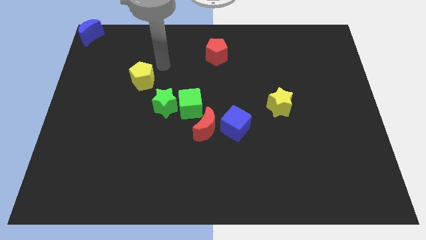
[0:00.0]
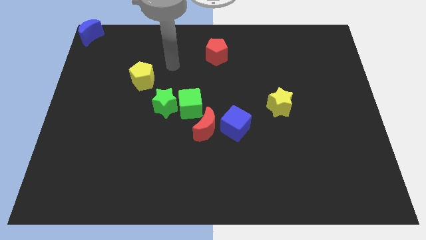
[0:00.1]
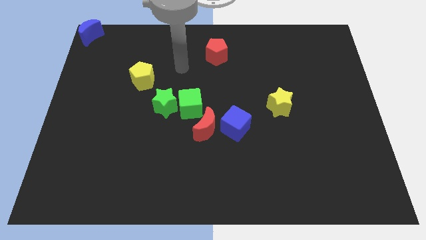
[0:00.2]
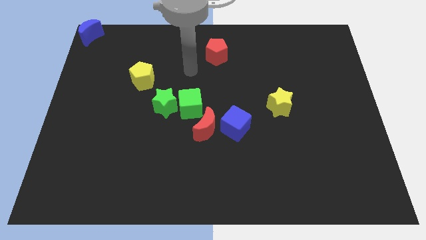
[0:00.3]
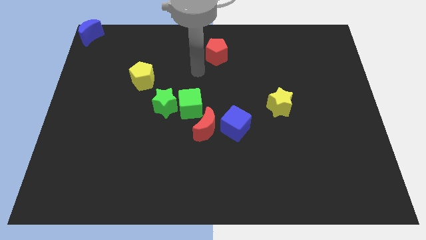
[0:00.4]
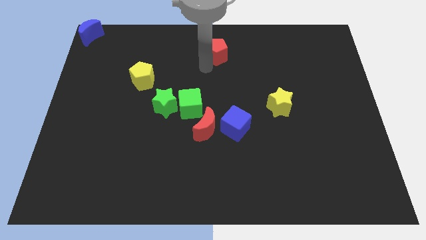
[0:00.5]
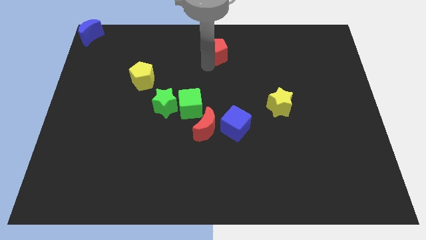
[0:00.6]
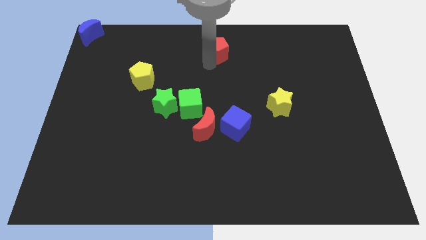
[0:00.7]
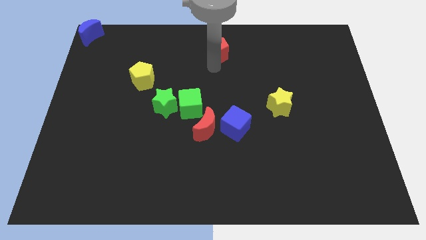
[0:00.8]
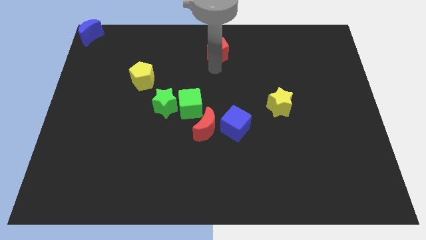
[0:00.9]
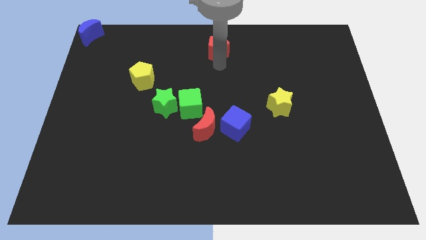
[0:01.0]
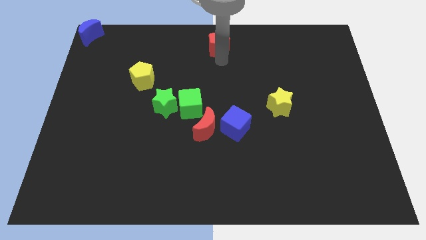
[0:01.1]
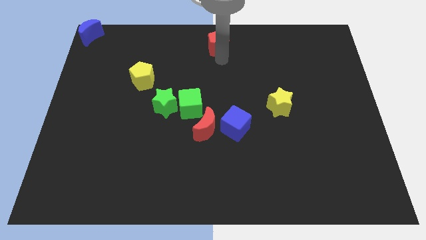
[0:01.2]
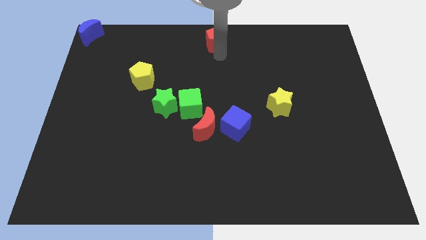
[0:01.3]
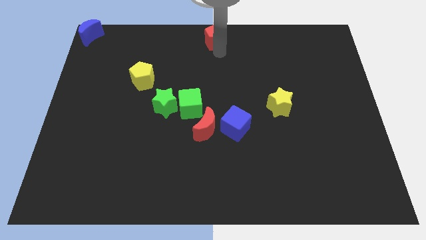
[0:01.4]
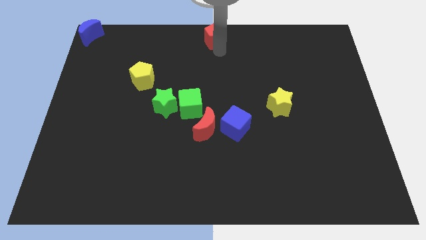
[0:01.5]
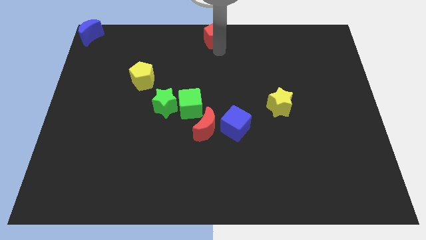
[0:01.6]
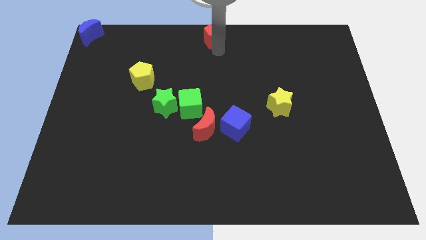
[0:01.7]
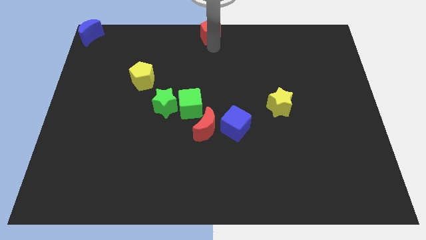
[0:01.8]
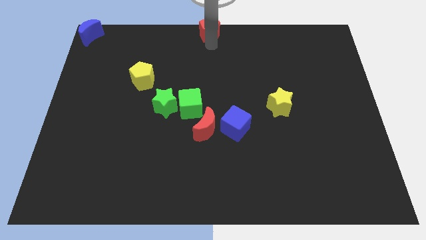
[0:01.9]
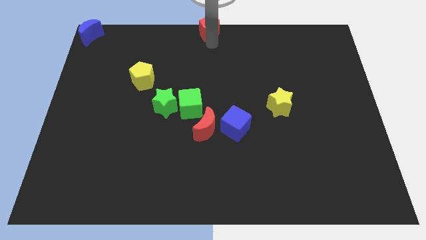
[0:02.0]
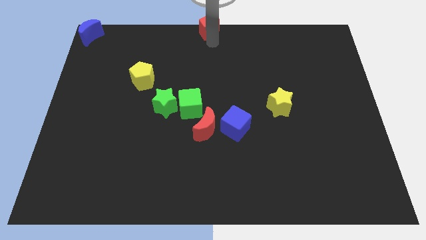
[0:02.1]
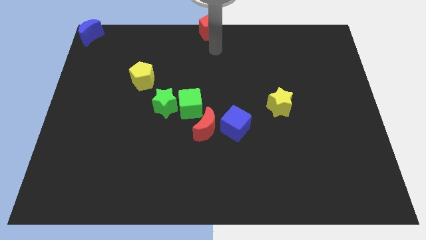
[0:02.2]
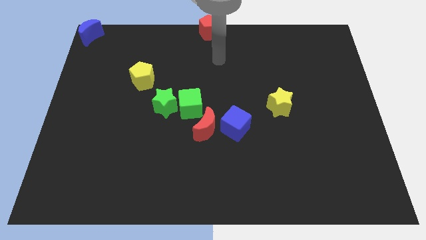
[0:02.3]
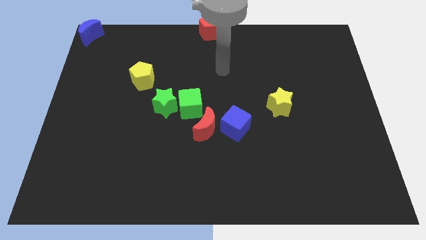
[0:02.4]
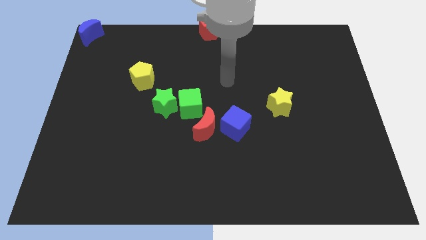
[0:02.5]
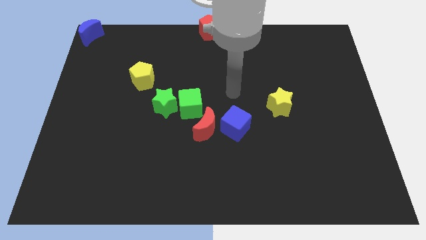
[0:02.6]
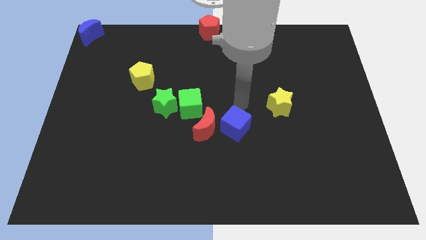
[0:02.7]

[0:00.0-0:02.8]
push the red pentagon to the top center

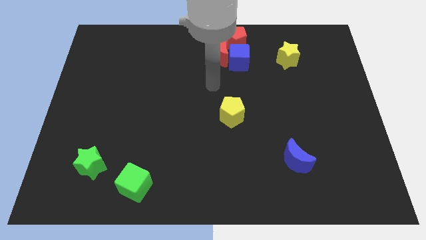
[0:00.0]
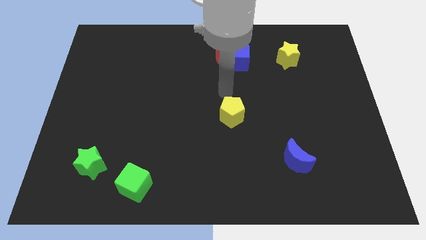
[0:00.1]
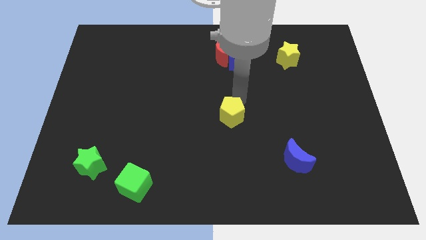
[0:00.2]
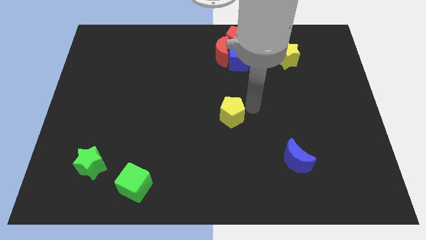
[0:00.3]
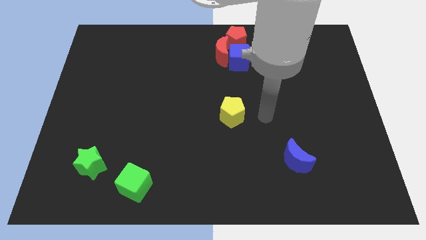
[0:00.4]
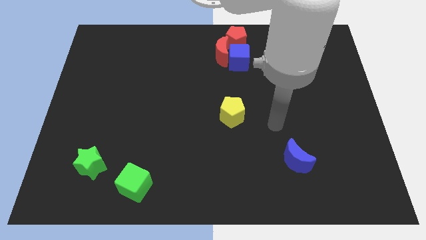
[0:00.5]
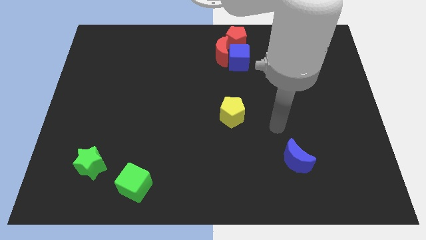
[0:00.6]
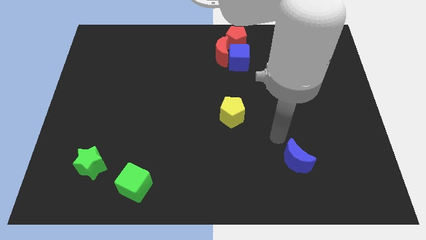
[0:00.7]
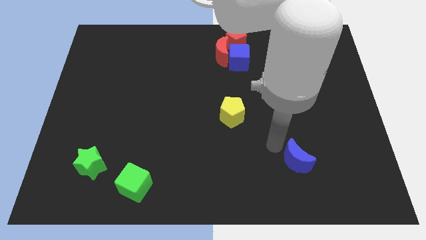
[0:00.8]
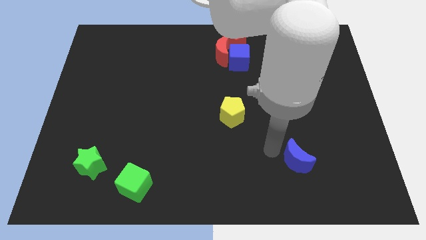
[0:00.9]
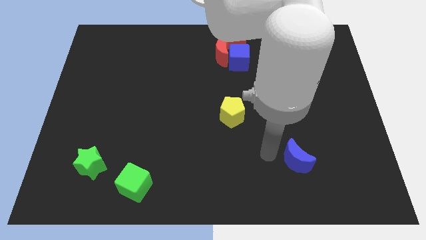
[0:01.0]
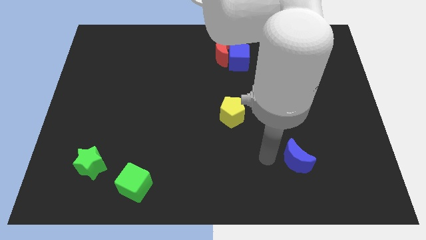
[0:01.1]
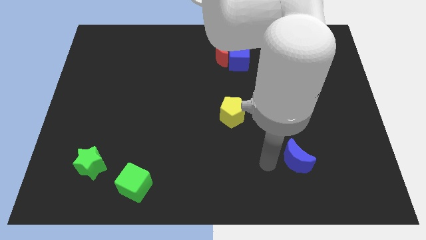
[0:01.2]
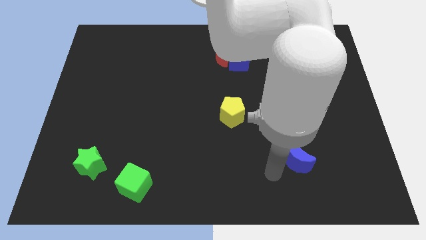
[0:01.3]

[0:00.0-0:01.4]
point your arm left to blue cube

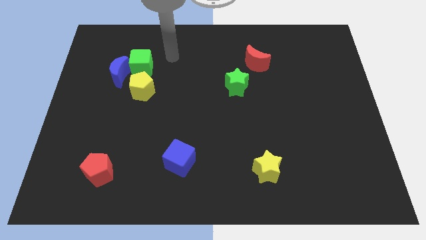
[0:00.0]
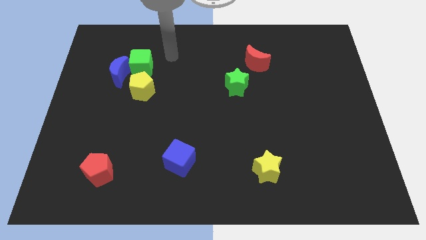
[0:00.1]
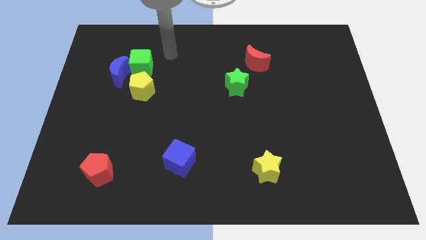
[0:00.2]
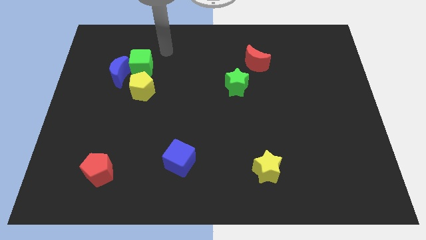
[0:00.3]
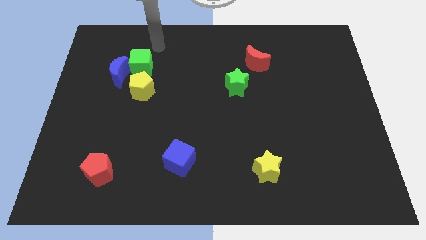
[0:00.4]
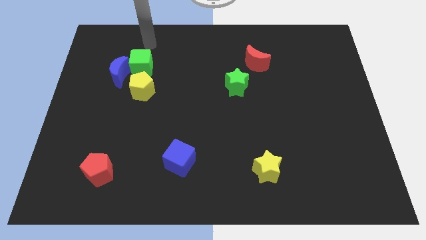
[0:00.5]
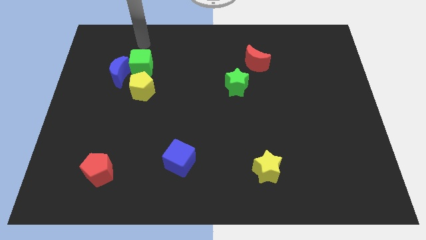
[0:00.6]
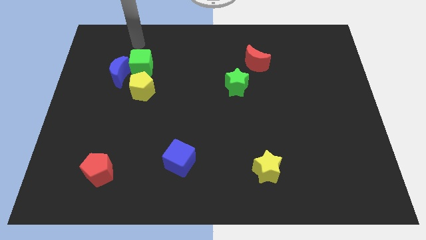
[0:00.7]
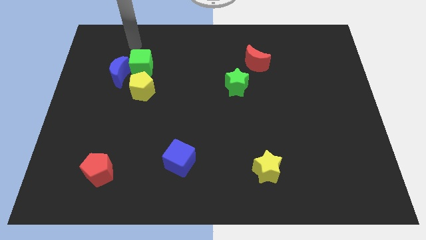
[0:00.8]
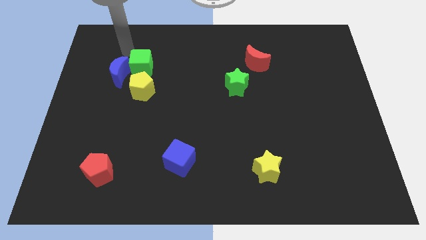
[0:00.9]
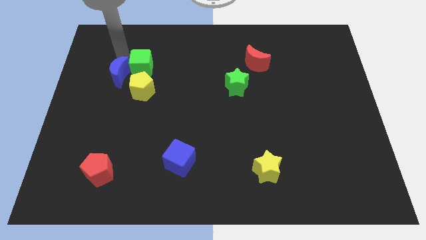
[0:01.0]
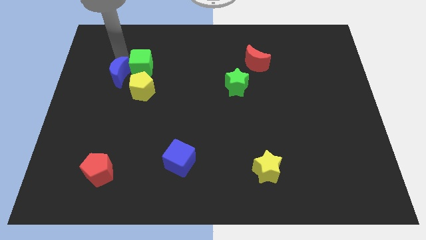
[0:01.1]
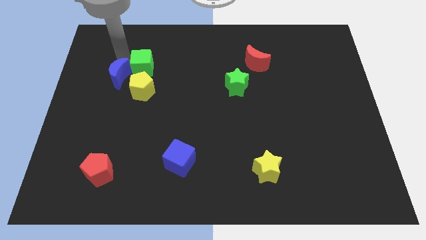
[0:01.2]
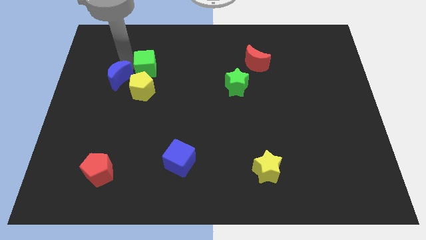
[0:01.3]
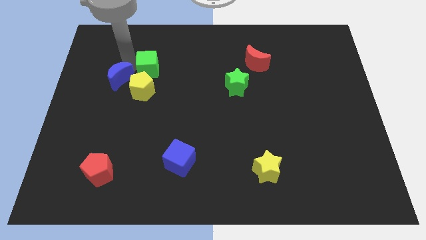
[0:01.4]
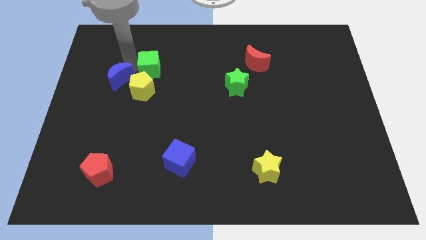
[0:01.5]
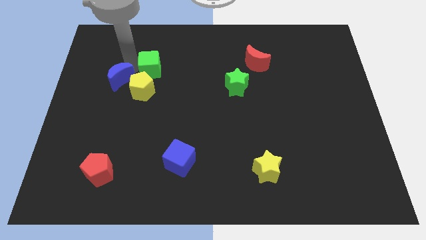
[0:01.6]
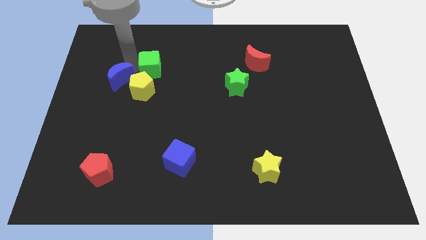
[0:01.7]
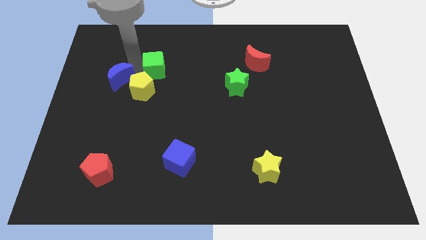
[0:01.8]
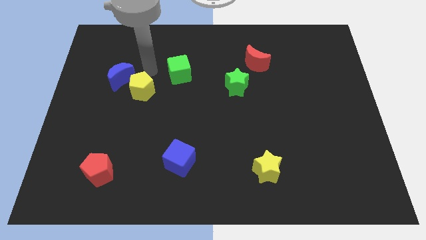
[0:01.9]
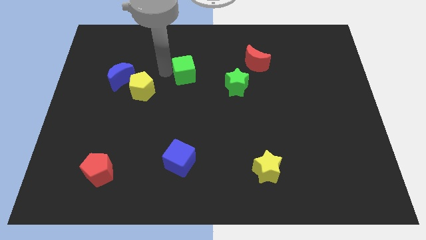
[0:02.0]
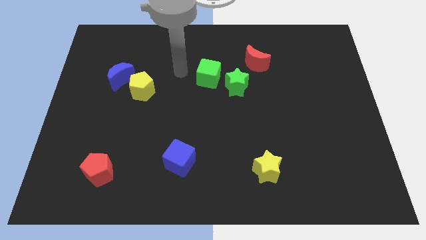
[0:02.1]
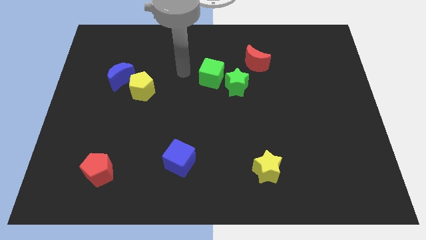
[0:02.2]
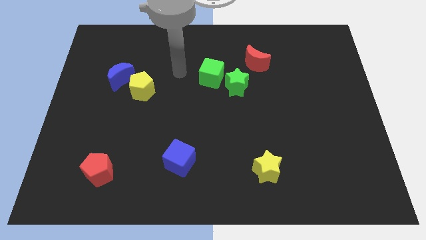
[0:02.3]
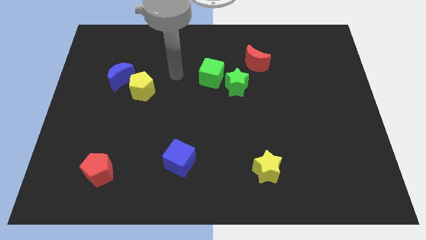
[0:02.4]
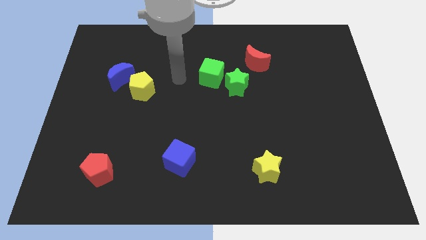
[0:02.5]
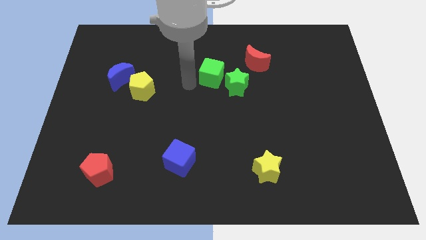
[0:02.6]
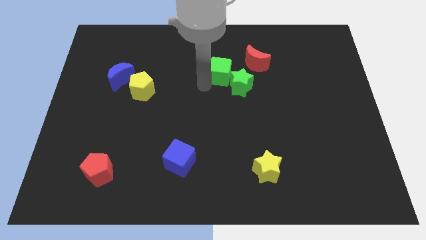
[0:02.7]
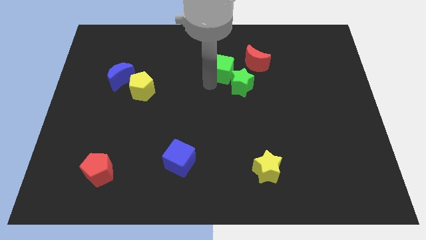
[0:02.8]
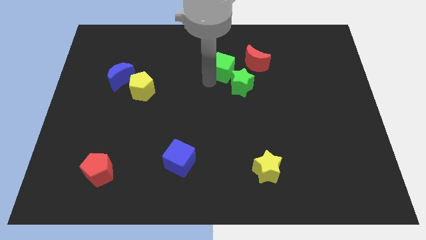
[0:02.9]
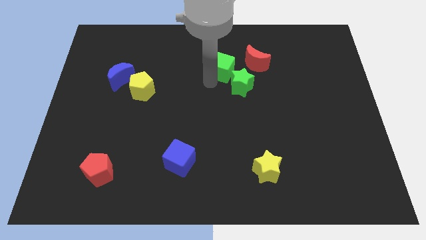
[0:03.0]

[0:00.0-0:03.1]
push the green cube close to green star

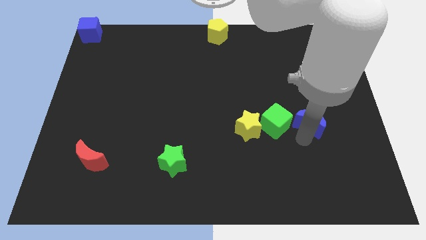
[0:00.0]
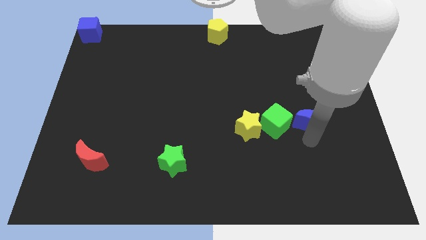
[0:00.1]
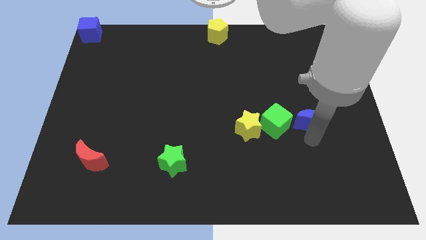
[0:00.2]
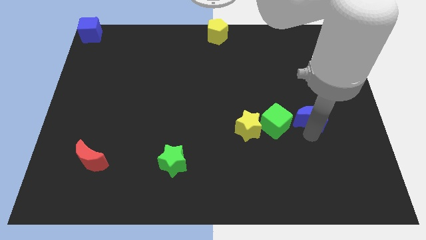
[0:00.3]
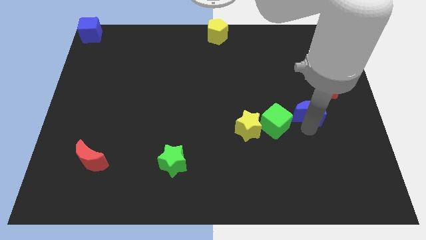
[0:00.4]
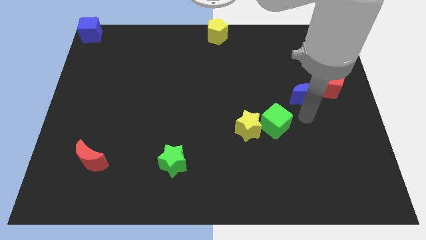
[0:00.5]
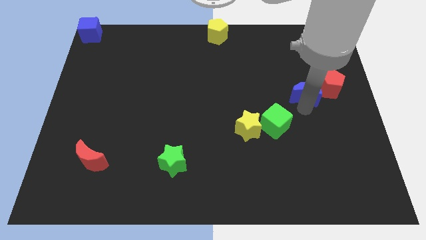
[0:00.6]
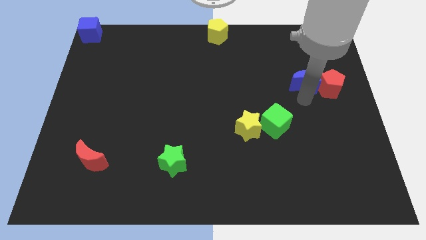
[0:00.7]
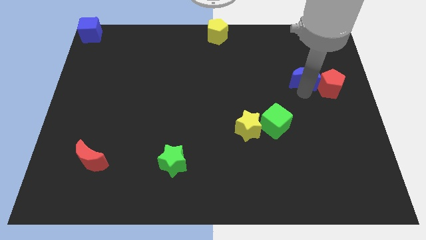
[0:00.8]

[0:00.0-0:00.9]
move the blue crescent to the left of the red pentagon

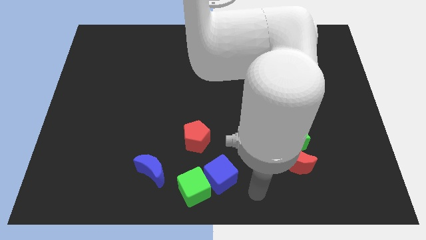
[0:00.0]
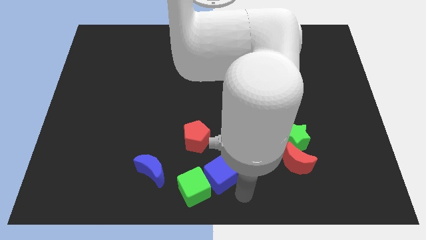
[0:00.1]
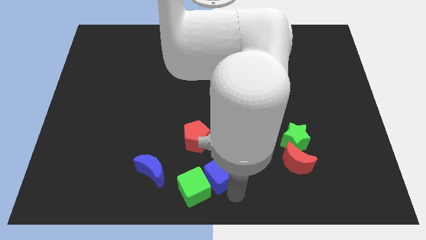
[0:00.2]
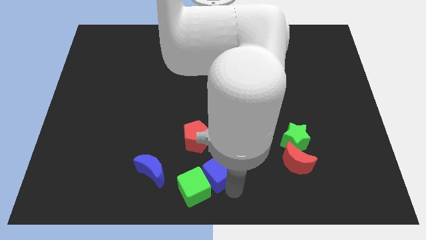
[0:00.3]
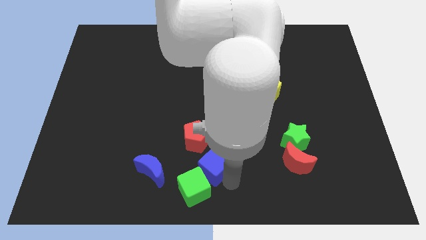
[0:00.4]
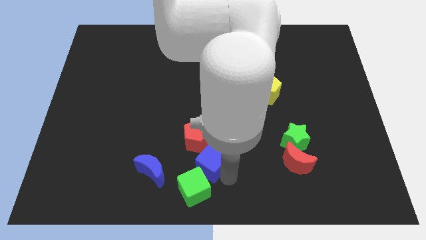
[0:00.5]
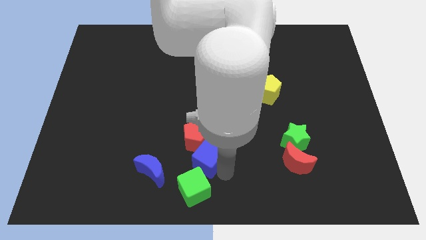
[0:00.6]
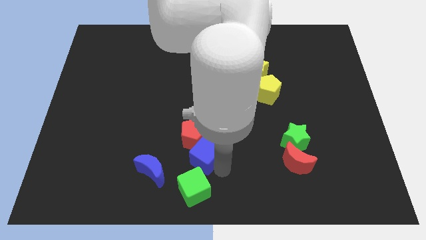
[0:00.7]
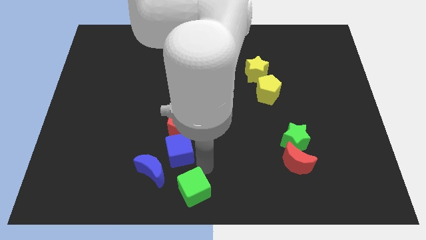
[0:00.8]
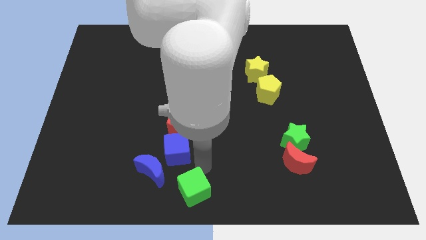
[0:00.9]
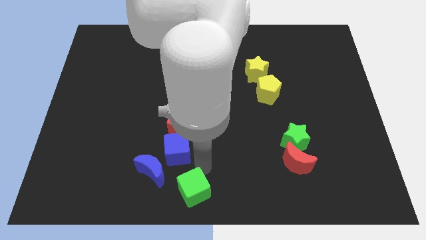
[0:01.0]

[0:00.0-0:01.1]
push the blue cube to the bottom side of the red pentagon
